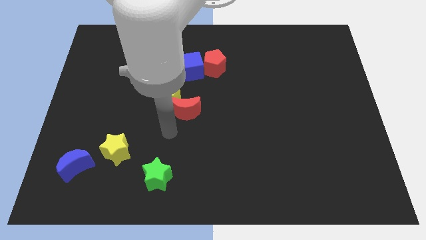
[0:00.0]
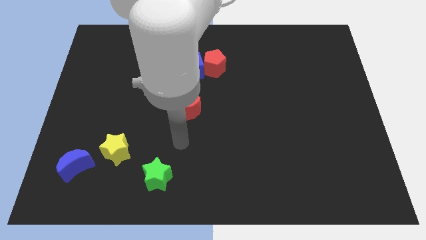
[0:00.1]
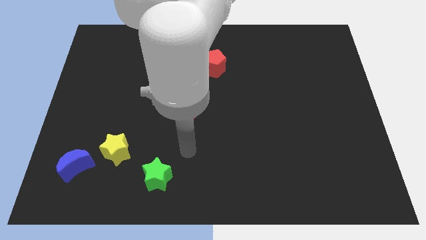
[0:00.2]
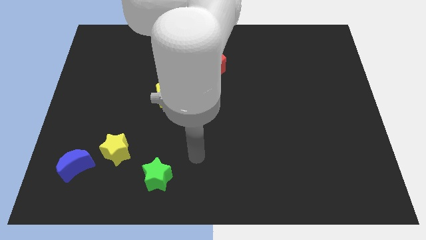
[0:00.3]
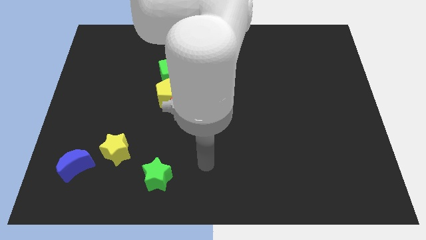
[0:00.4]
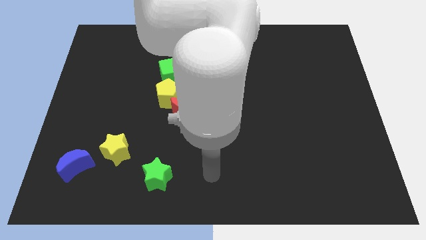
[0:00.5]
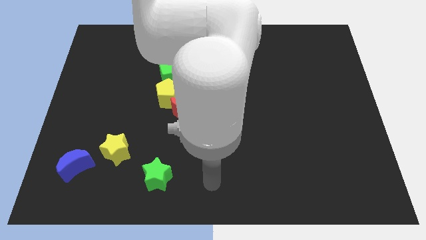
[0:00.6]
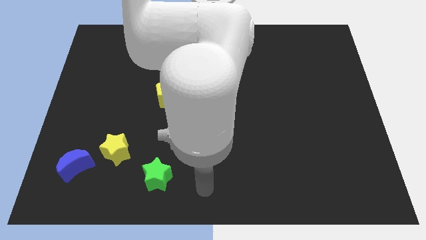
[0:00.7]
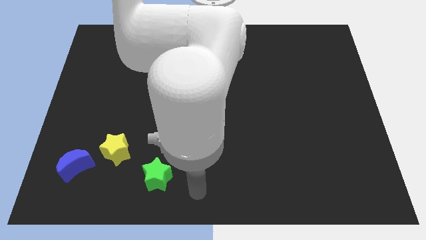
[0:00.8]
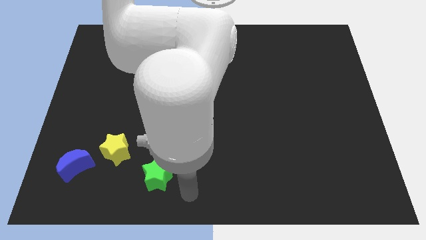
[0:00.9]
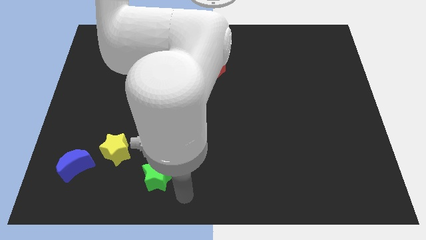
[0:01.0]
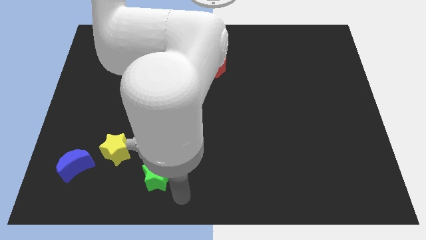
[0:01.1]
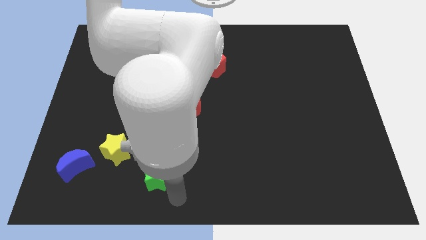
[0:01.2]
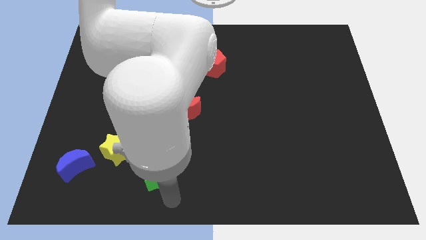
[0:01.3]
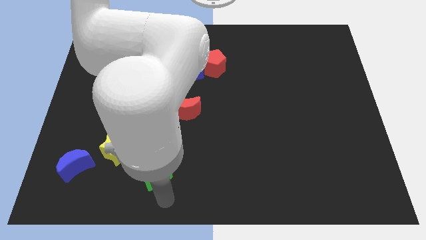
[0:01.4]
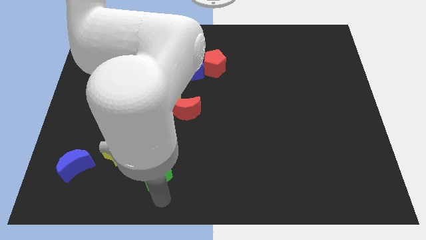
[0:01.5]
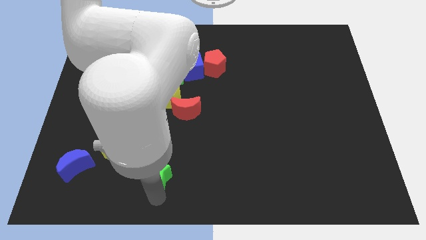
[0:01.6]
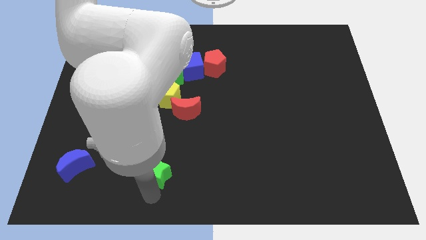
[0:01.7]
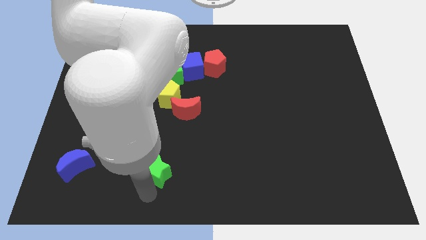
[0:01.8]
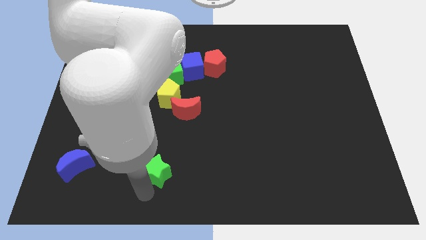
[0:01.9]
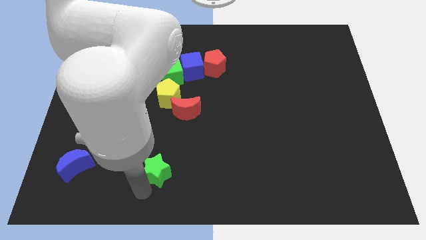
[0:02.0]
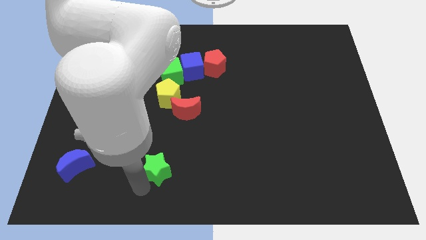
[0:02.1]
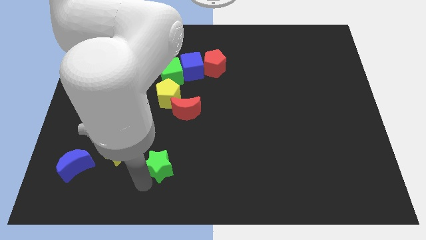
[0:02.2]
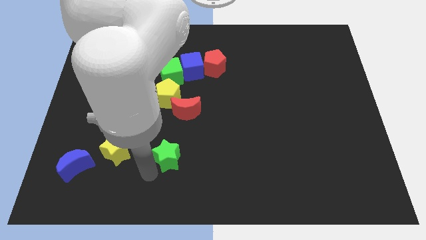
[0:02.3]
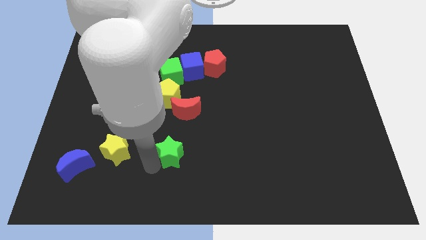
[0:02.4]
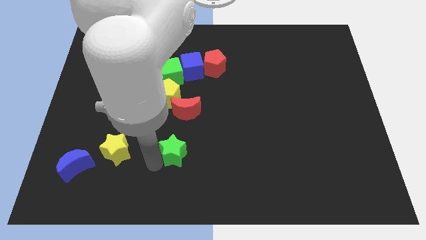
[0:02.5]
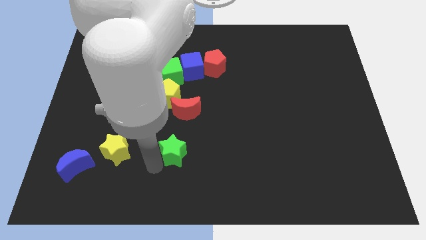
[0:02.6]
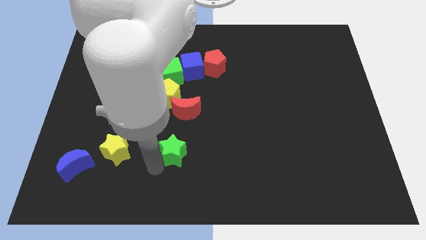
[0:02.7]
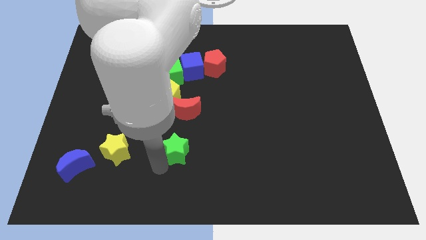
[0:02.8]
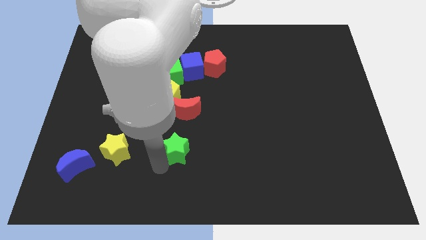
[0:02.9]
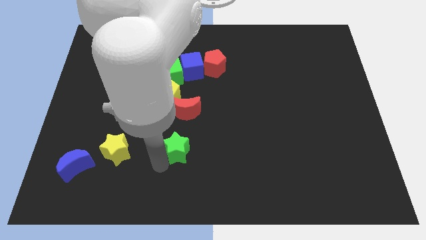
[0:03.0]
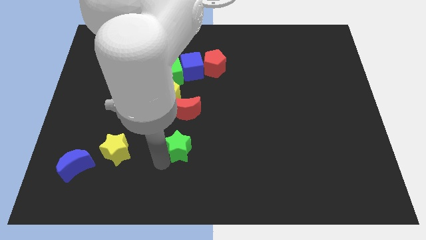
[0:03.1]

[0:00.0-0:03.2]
place the green star to the right side of the yellow star

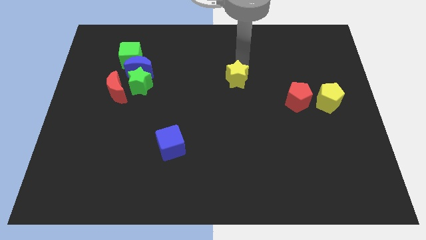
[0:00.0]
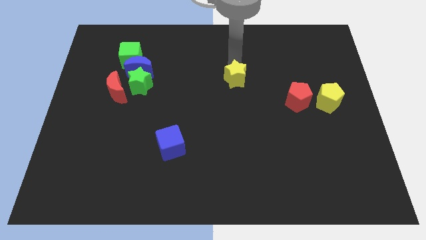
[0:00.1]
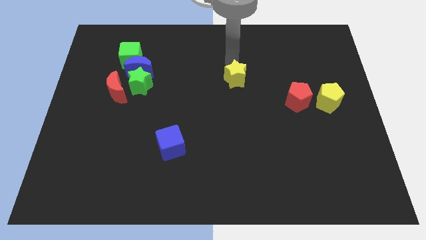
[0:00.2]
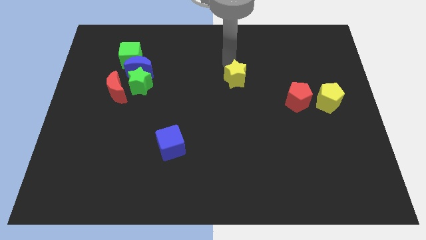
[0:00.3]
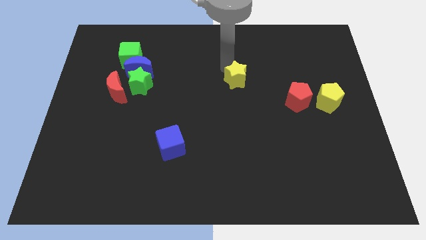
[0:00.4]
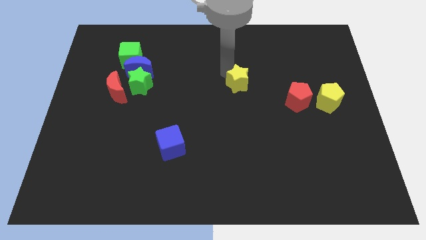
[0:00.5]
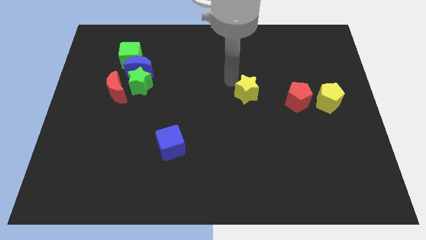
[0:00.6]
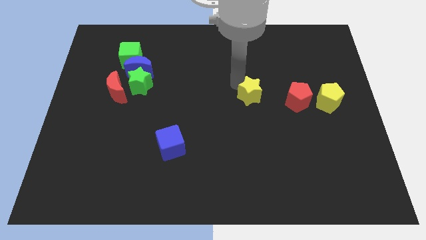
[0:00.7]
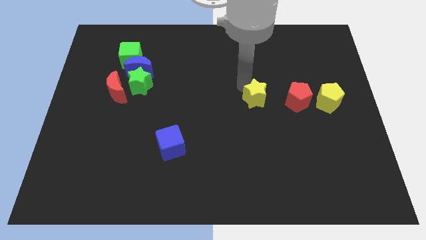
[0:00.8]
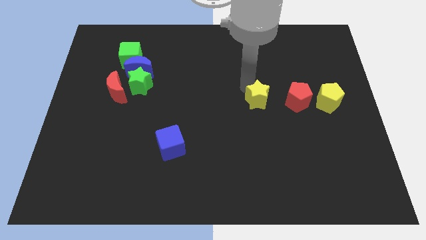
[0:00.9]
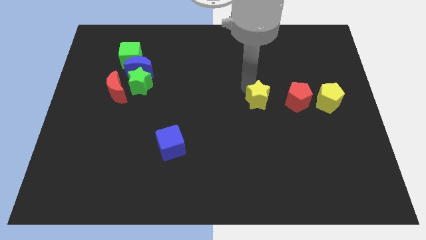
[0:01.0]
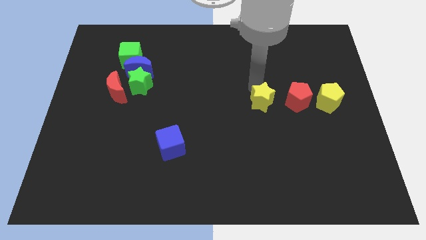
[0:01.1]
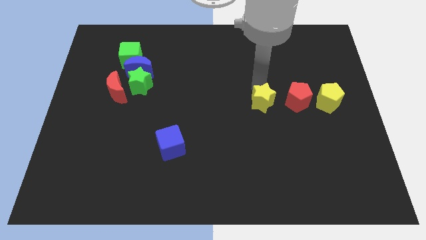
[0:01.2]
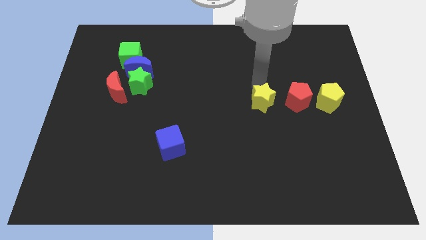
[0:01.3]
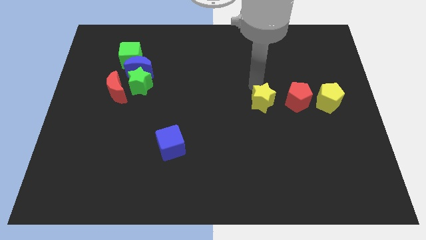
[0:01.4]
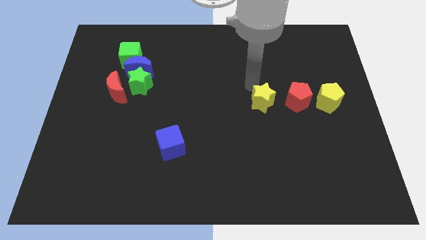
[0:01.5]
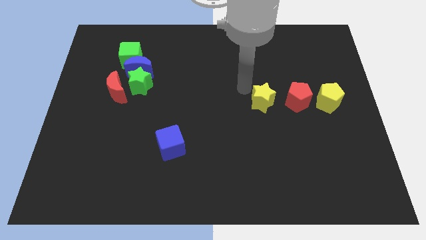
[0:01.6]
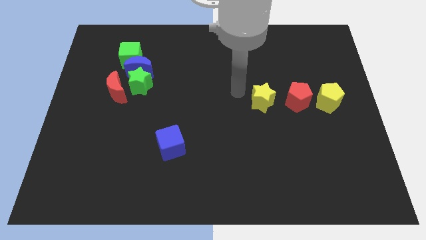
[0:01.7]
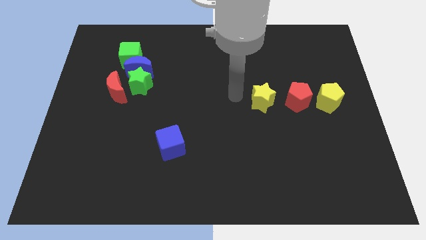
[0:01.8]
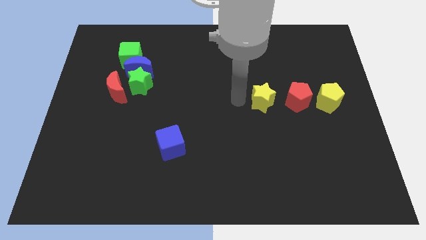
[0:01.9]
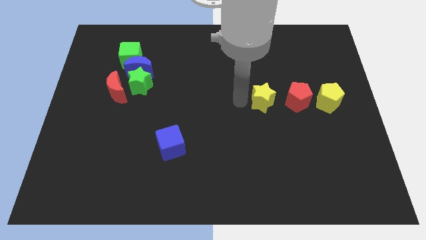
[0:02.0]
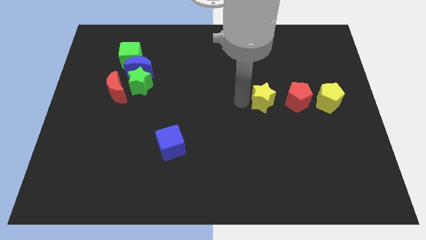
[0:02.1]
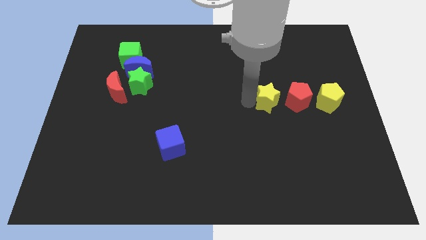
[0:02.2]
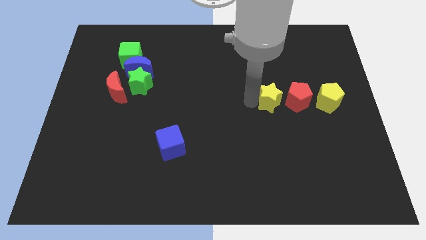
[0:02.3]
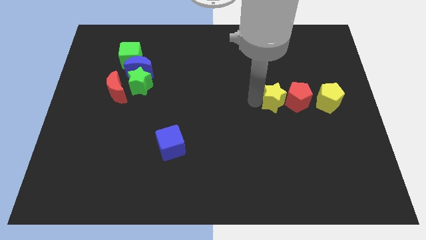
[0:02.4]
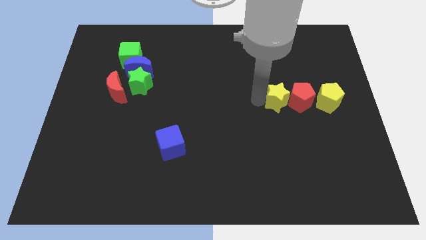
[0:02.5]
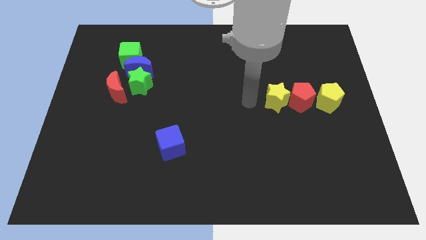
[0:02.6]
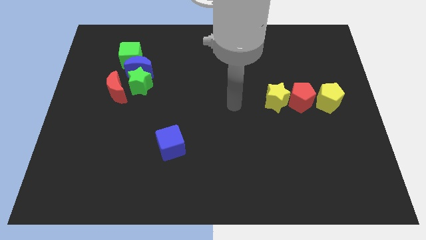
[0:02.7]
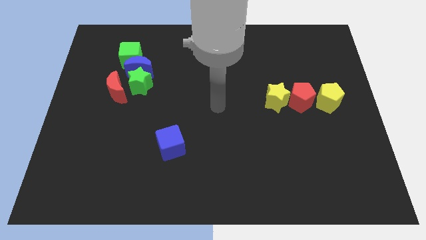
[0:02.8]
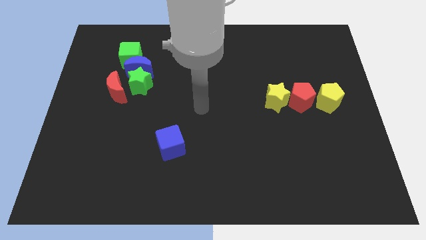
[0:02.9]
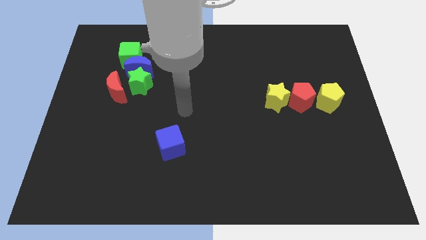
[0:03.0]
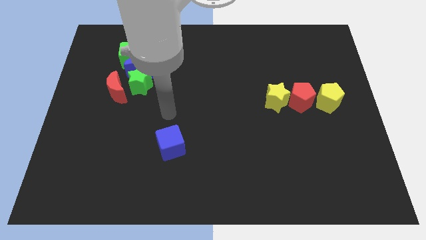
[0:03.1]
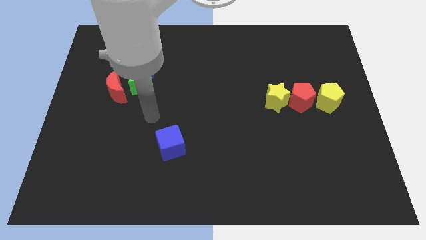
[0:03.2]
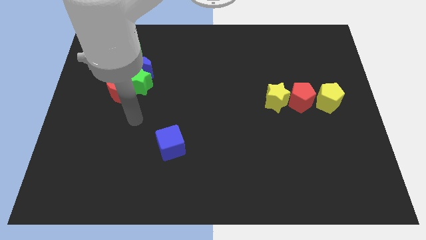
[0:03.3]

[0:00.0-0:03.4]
push the yellow star into the red pentagon

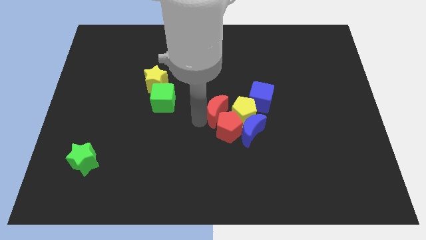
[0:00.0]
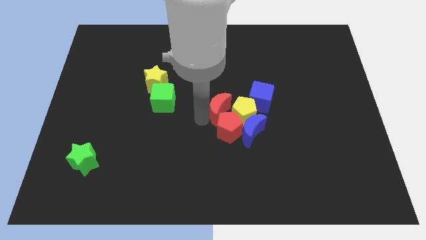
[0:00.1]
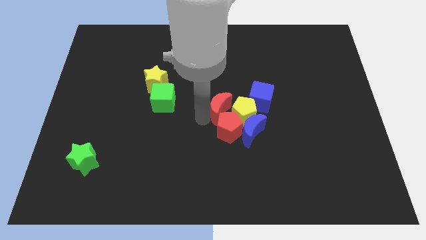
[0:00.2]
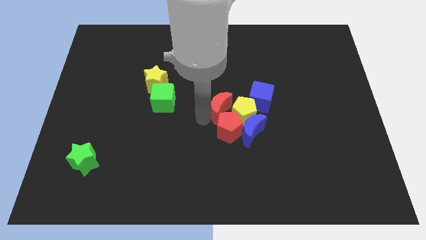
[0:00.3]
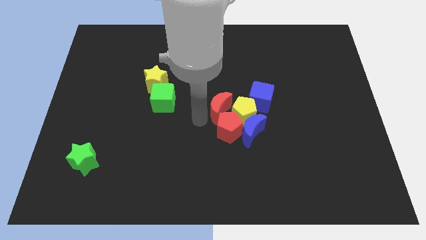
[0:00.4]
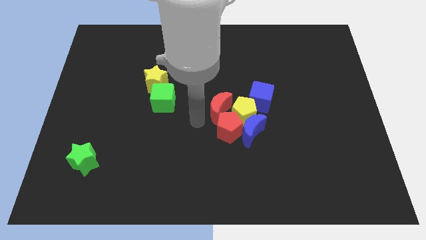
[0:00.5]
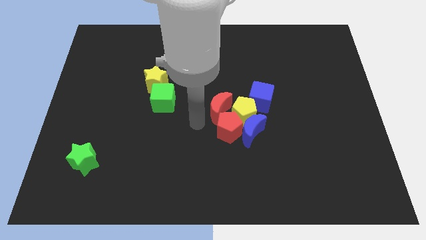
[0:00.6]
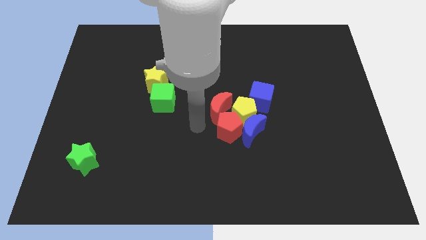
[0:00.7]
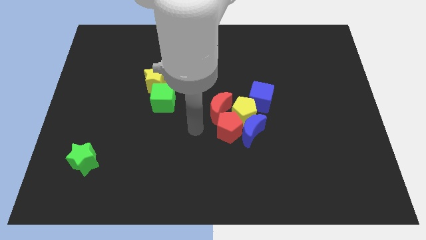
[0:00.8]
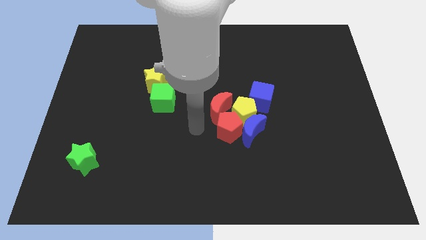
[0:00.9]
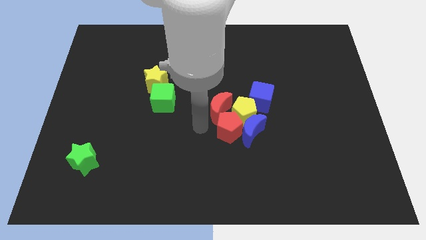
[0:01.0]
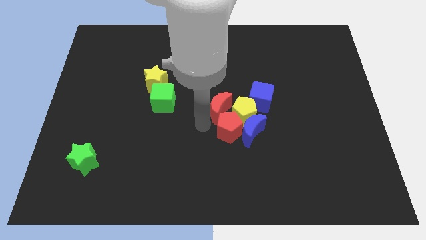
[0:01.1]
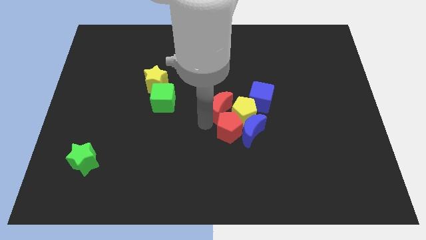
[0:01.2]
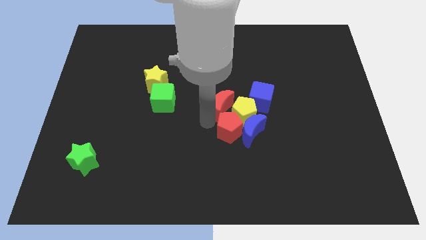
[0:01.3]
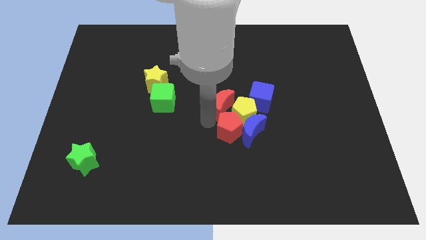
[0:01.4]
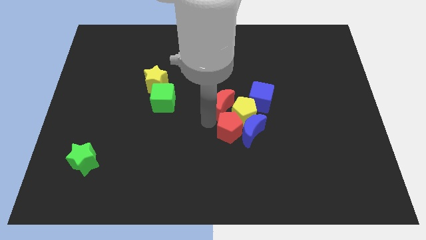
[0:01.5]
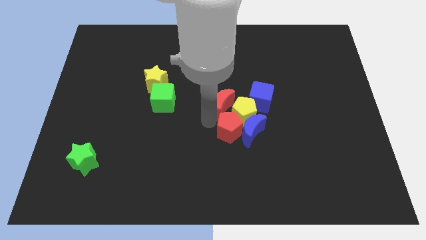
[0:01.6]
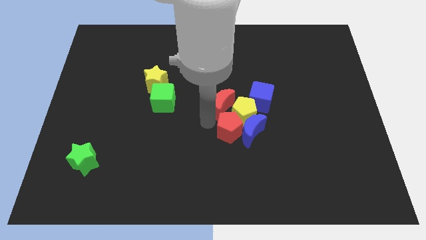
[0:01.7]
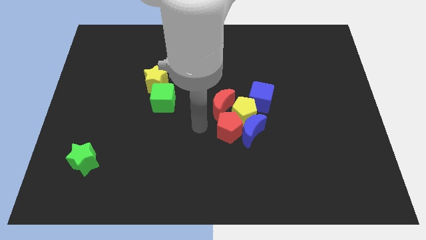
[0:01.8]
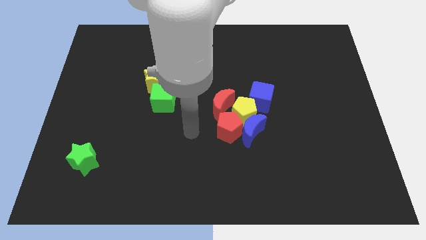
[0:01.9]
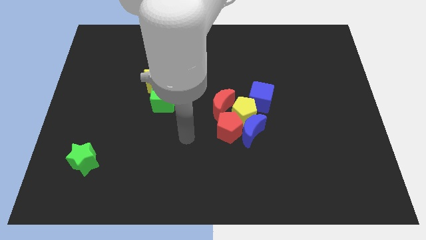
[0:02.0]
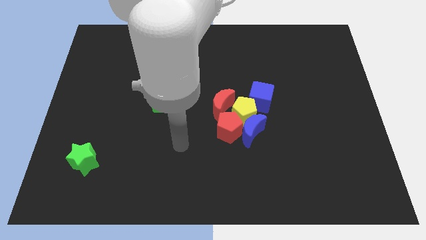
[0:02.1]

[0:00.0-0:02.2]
place the red crescent at the left side of the yellow pentagon
